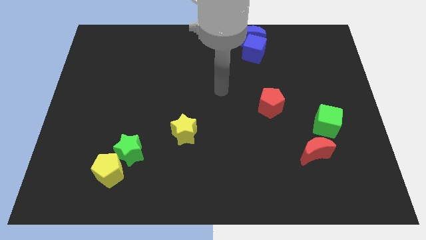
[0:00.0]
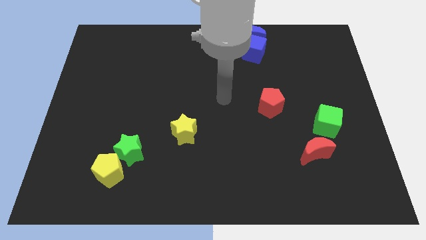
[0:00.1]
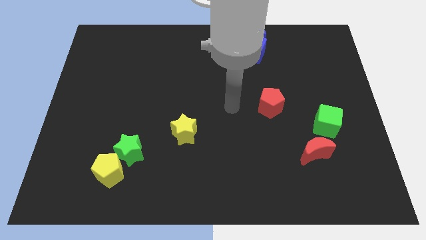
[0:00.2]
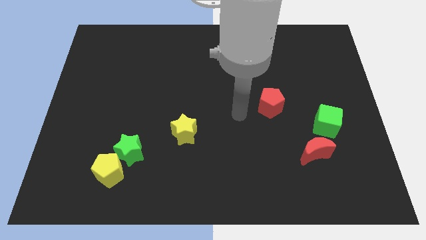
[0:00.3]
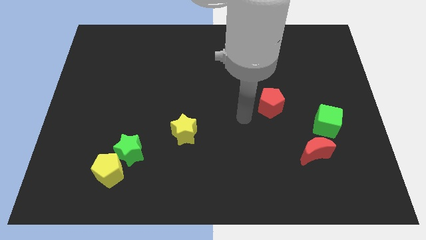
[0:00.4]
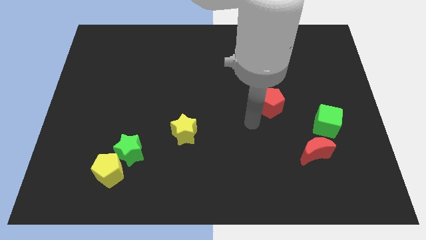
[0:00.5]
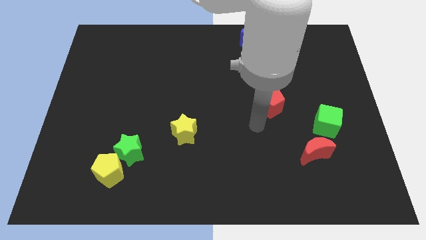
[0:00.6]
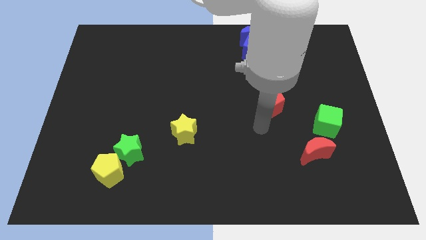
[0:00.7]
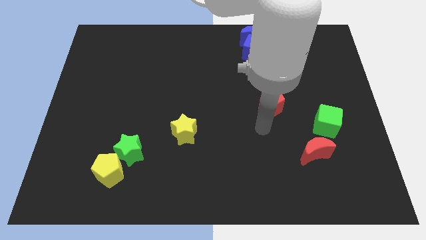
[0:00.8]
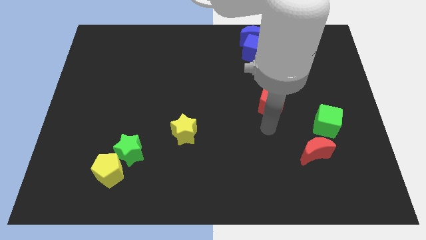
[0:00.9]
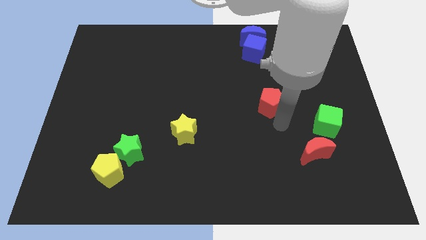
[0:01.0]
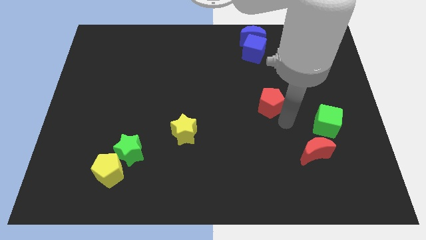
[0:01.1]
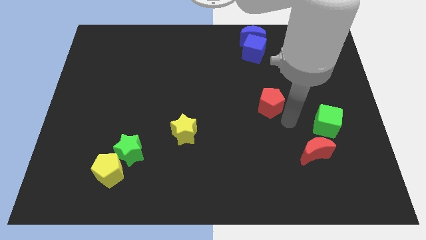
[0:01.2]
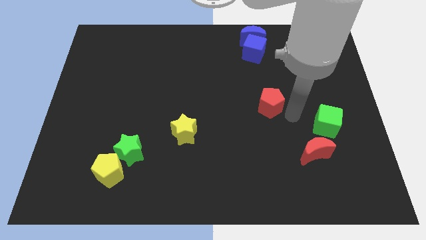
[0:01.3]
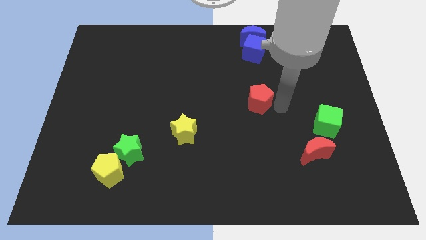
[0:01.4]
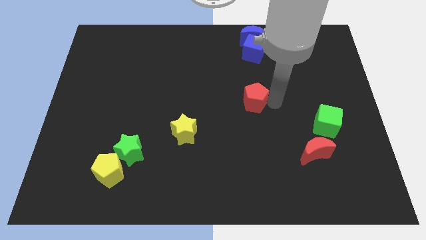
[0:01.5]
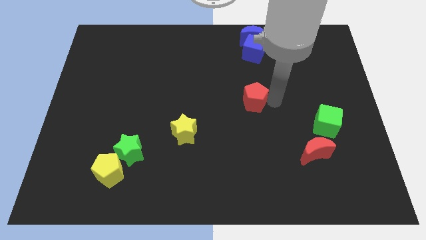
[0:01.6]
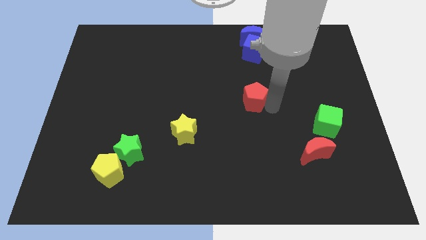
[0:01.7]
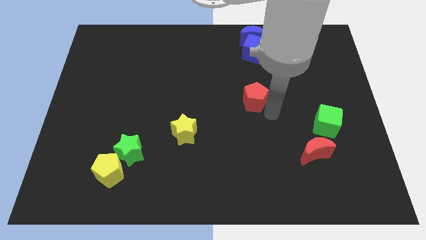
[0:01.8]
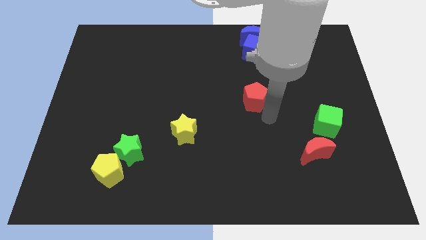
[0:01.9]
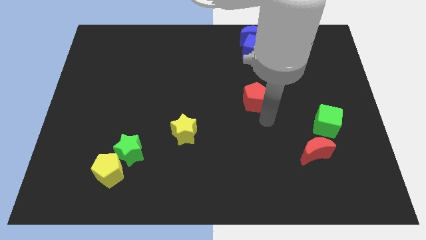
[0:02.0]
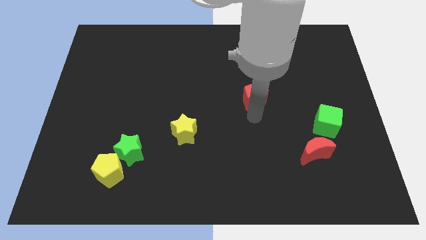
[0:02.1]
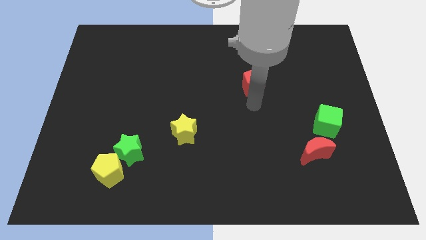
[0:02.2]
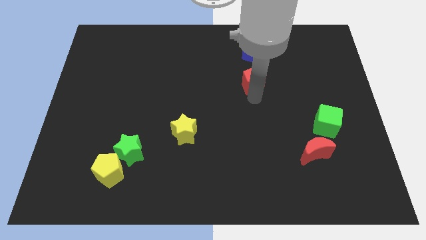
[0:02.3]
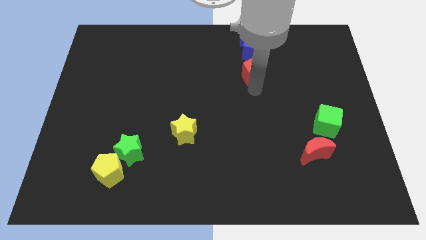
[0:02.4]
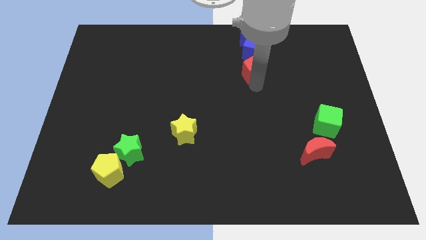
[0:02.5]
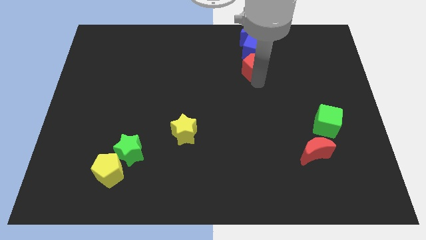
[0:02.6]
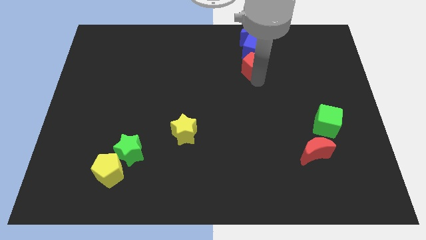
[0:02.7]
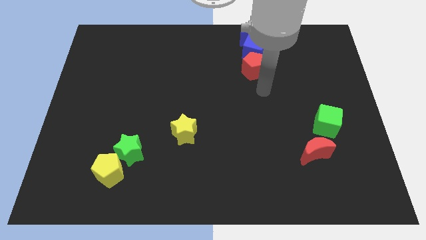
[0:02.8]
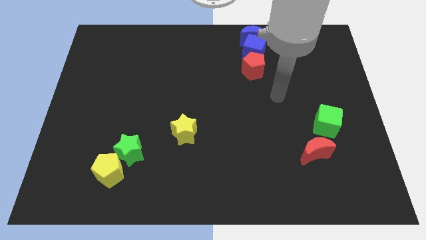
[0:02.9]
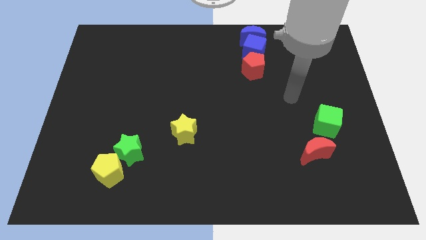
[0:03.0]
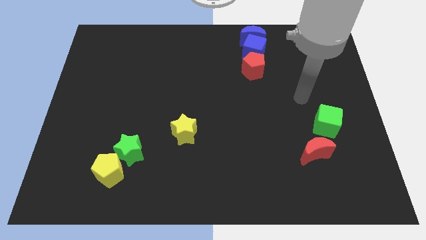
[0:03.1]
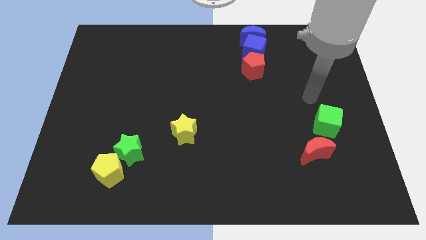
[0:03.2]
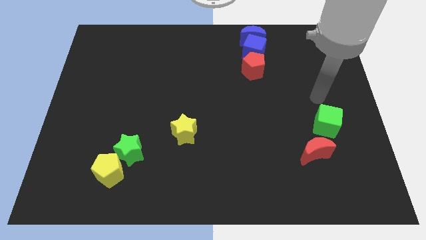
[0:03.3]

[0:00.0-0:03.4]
place the red pentagon into the blue cube

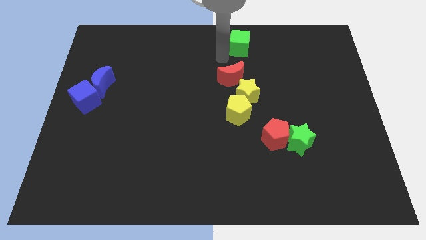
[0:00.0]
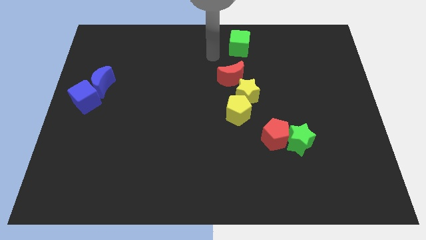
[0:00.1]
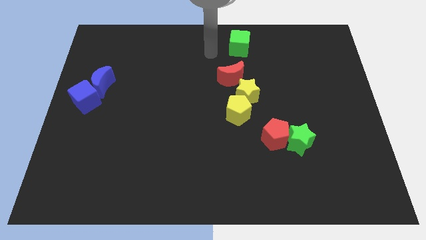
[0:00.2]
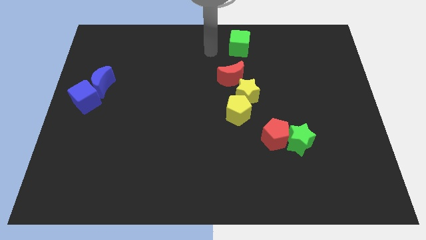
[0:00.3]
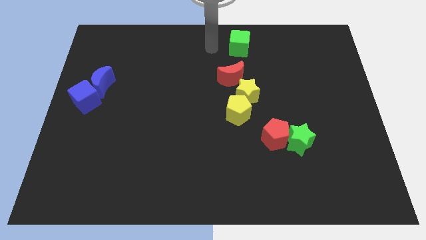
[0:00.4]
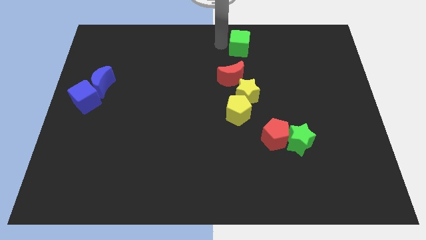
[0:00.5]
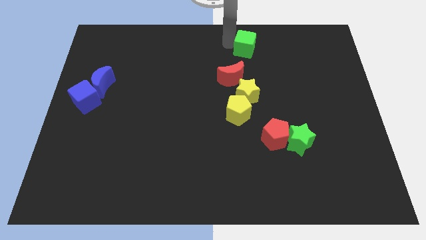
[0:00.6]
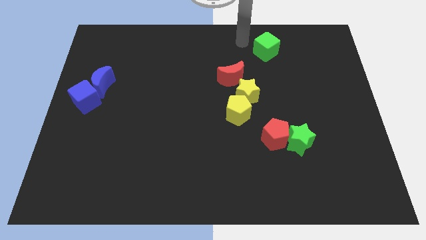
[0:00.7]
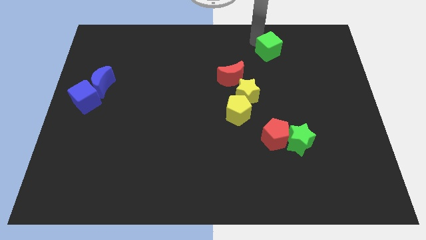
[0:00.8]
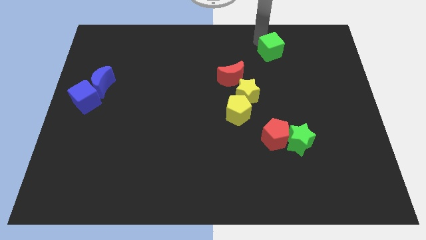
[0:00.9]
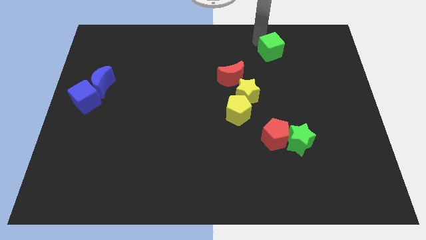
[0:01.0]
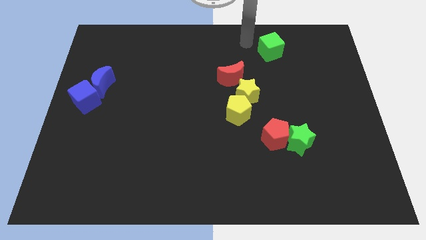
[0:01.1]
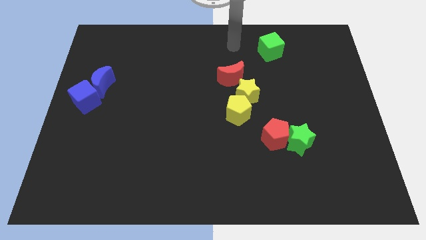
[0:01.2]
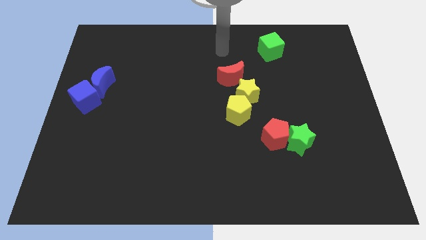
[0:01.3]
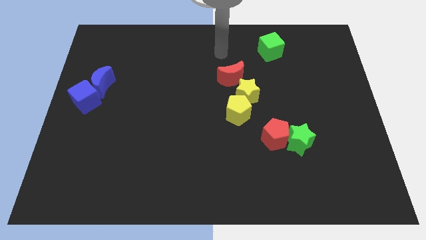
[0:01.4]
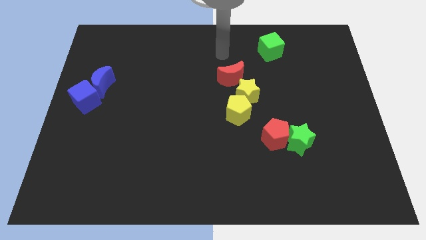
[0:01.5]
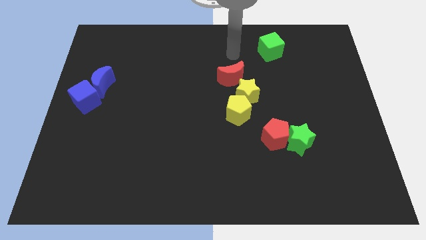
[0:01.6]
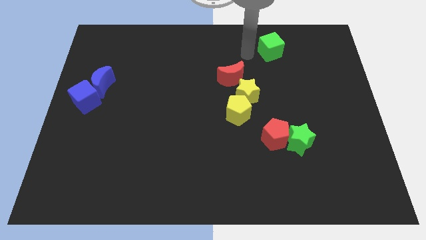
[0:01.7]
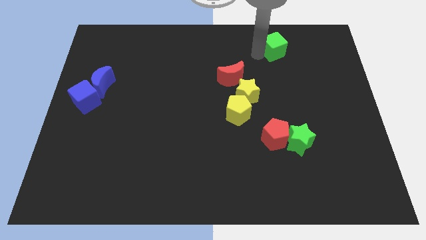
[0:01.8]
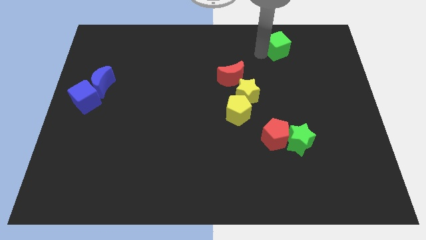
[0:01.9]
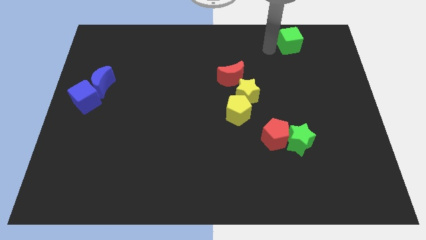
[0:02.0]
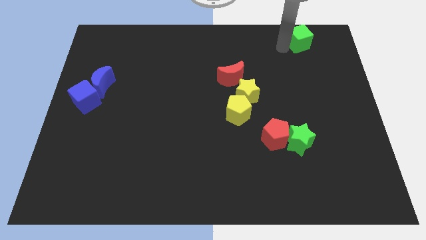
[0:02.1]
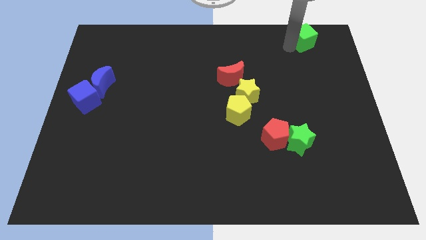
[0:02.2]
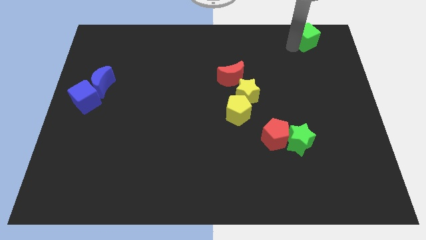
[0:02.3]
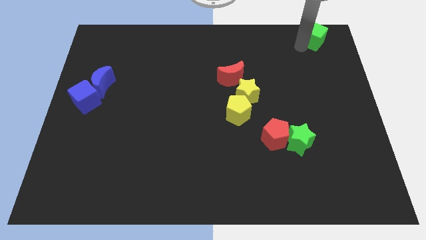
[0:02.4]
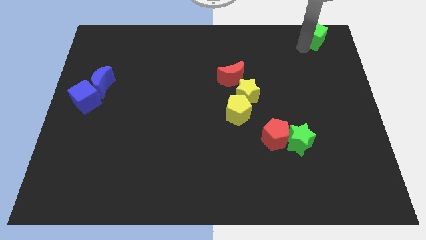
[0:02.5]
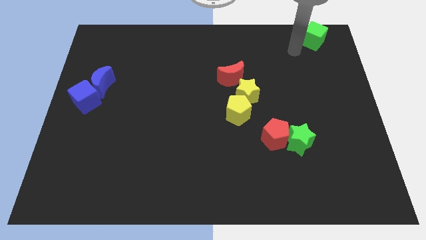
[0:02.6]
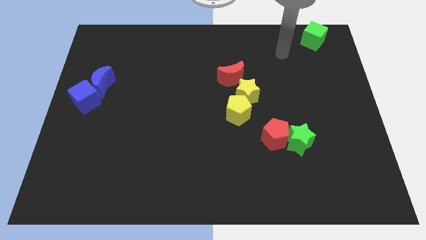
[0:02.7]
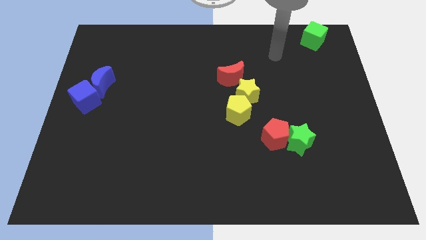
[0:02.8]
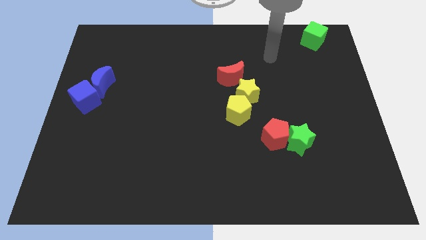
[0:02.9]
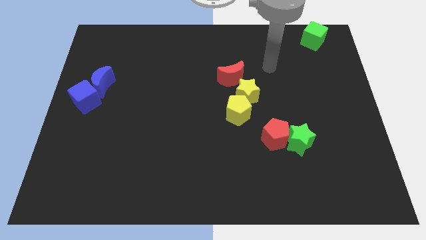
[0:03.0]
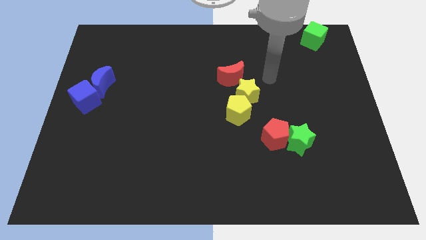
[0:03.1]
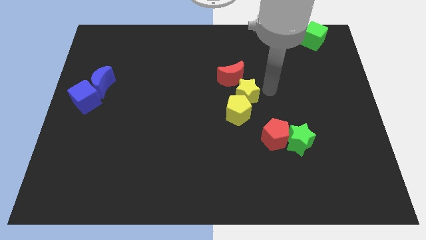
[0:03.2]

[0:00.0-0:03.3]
move the green cube to the top right on the board

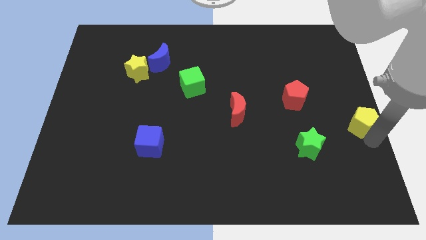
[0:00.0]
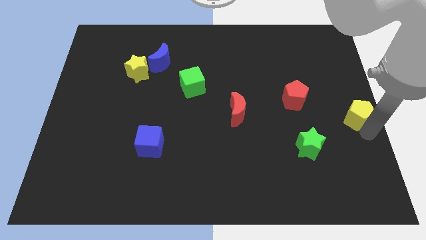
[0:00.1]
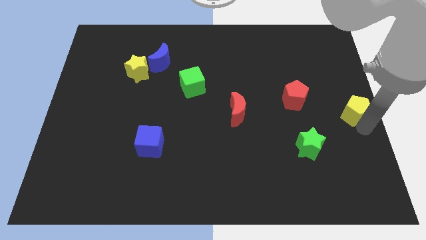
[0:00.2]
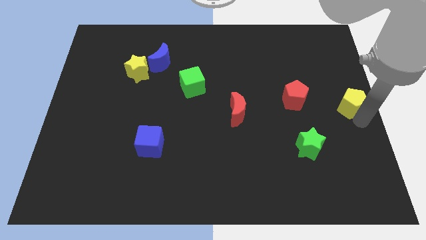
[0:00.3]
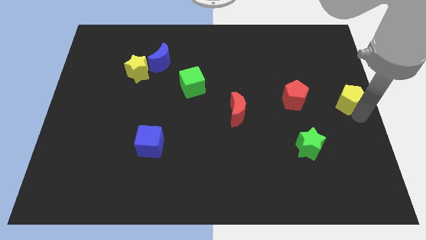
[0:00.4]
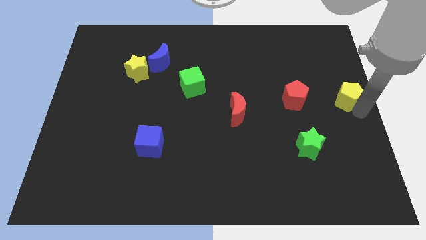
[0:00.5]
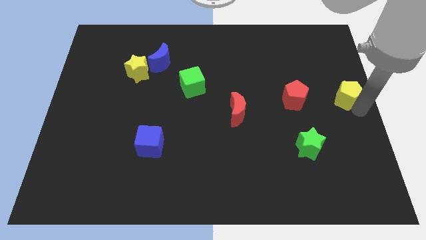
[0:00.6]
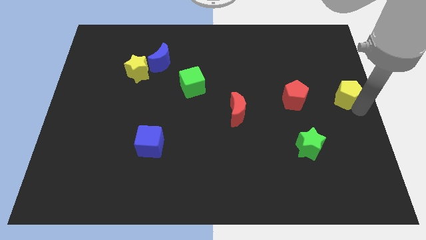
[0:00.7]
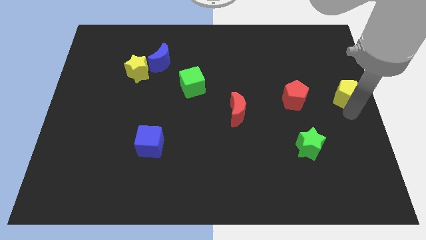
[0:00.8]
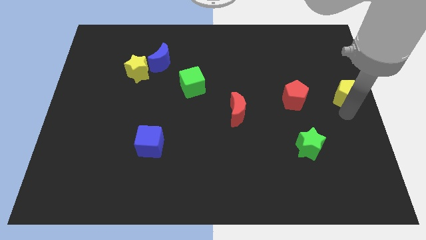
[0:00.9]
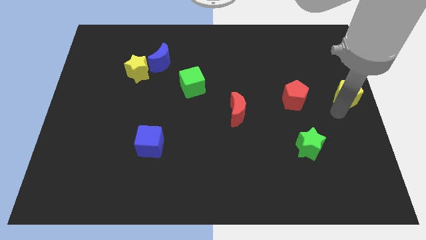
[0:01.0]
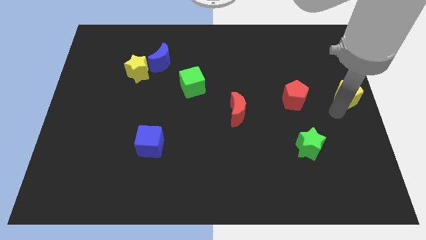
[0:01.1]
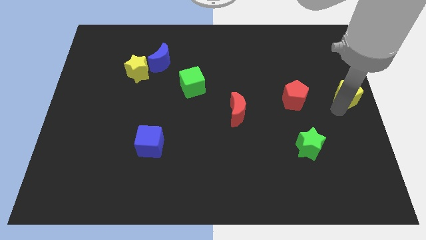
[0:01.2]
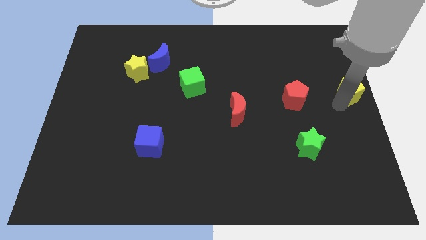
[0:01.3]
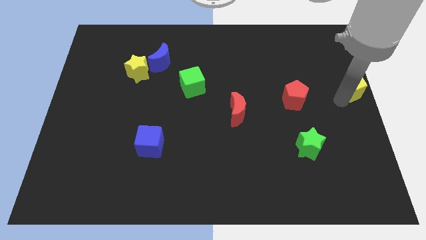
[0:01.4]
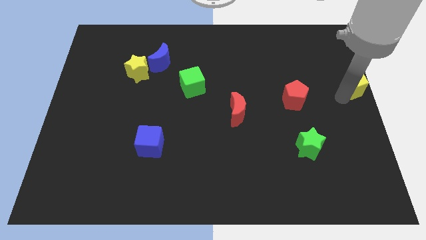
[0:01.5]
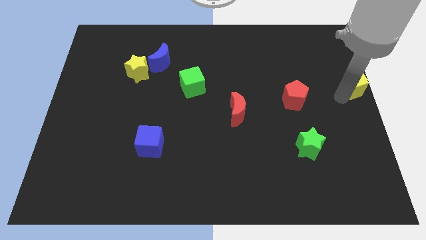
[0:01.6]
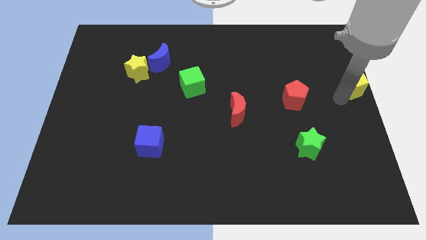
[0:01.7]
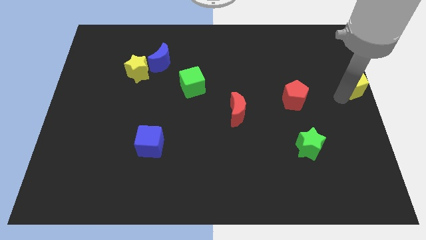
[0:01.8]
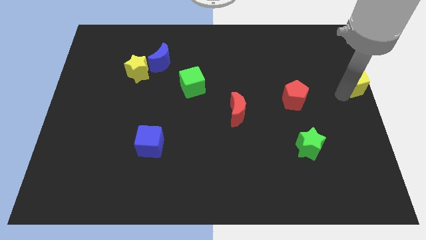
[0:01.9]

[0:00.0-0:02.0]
place yellow pentagon beside red pentagon

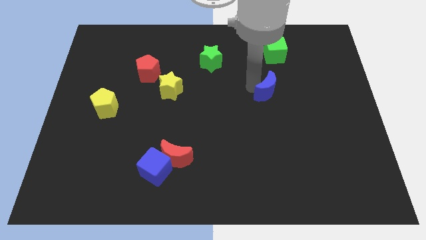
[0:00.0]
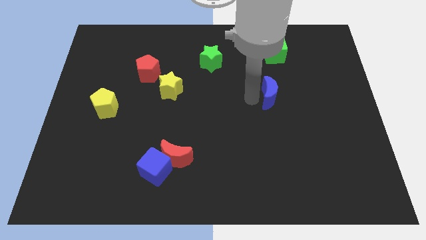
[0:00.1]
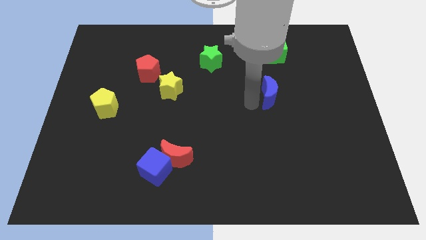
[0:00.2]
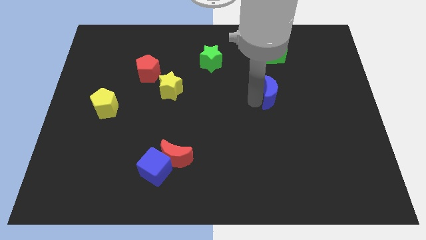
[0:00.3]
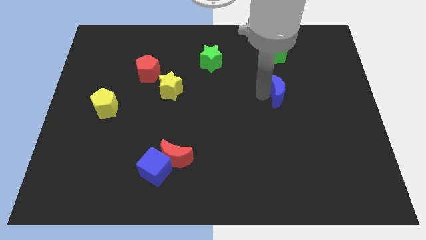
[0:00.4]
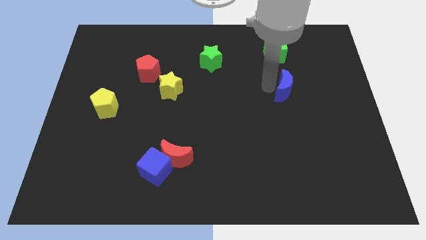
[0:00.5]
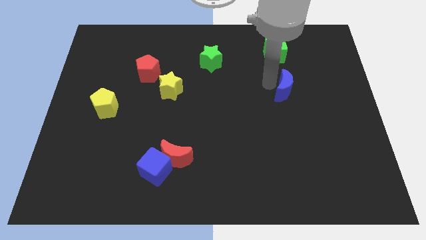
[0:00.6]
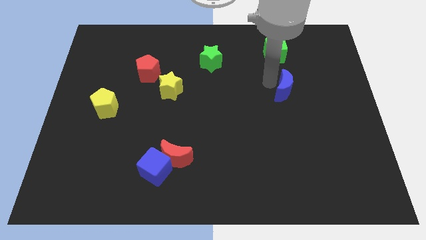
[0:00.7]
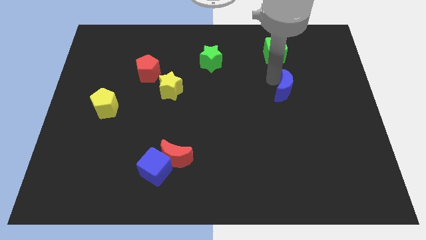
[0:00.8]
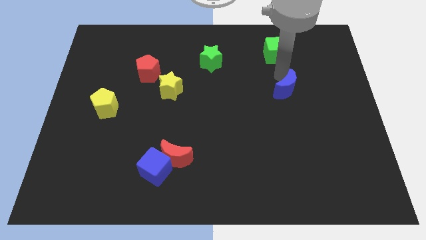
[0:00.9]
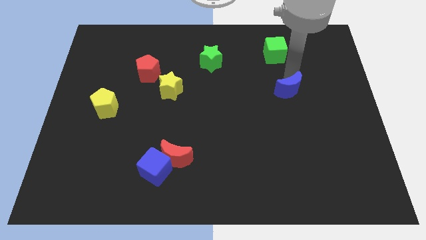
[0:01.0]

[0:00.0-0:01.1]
slide the blue moon below to the green cube
